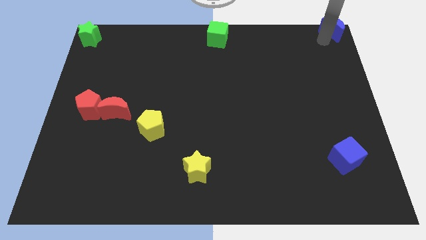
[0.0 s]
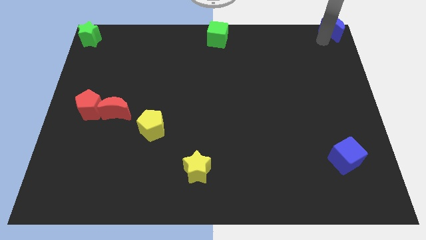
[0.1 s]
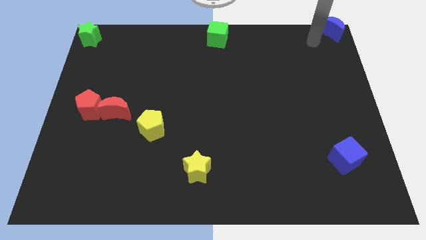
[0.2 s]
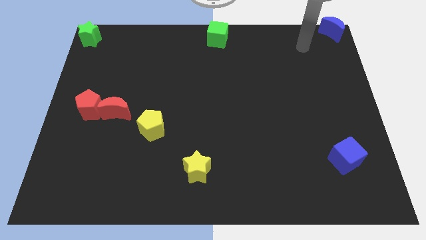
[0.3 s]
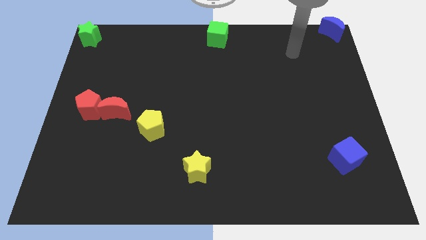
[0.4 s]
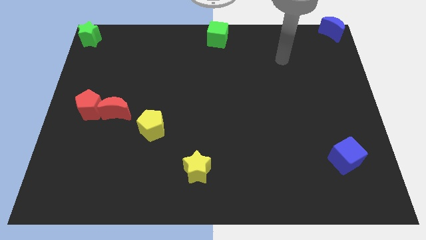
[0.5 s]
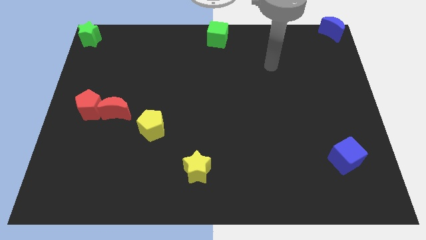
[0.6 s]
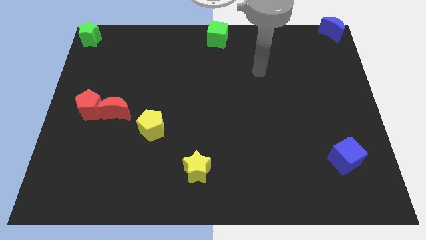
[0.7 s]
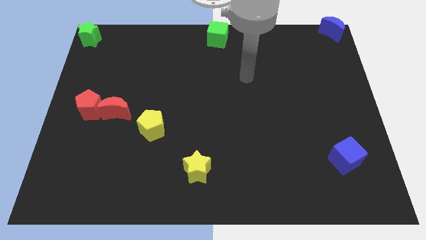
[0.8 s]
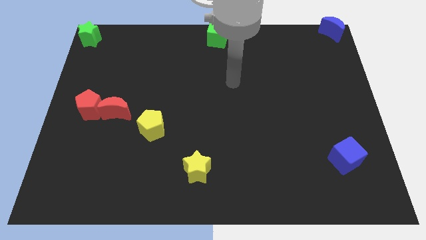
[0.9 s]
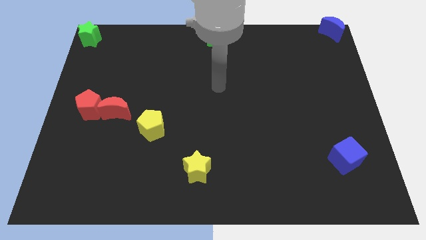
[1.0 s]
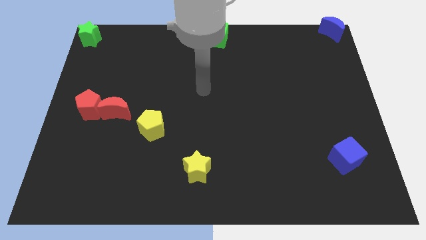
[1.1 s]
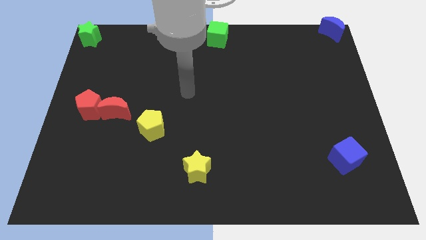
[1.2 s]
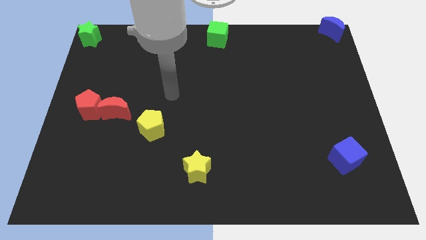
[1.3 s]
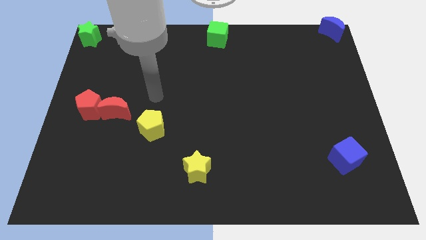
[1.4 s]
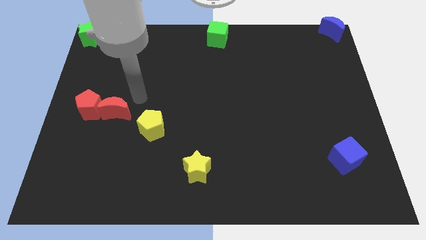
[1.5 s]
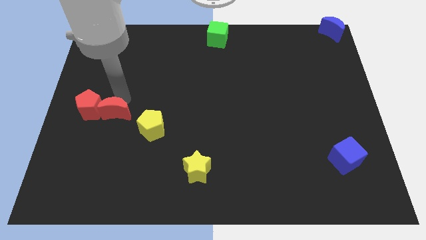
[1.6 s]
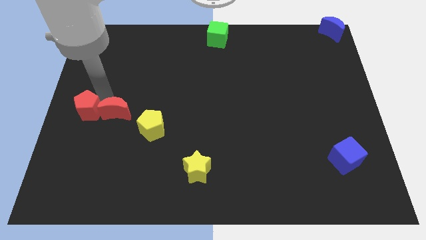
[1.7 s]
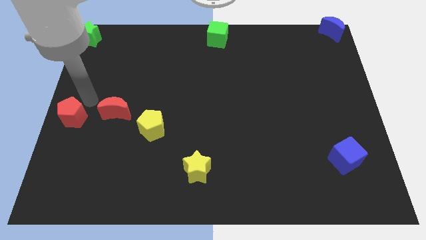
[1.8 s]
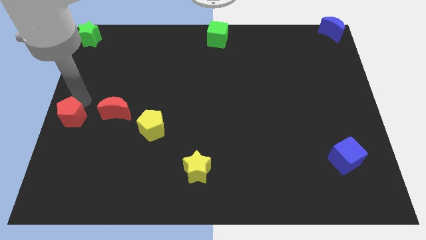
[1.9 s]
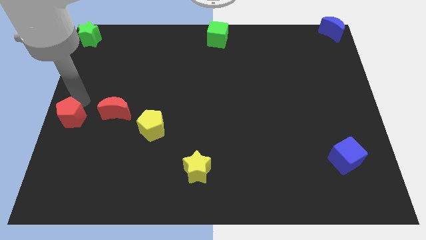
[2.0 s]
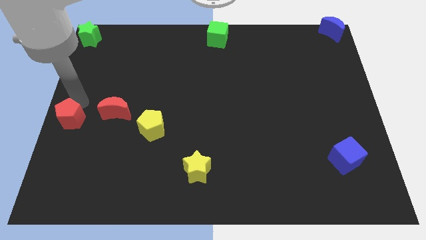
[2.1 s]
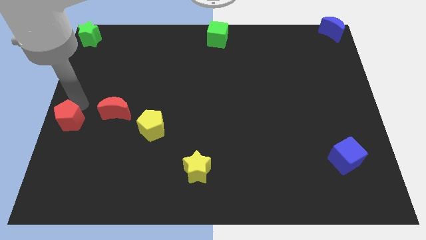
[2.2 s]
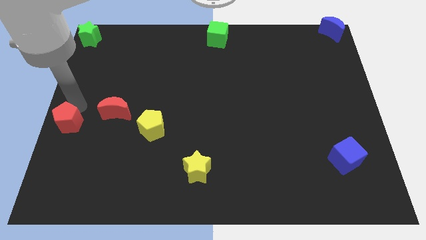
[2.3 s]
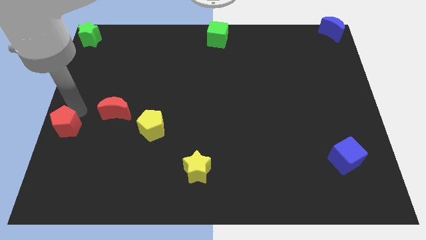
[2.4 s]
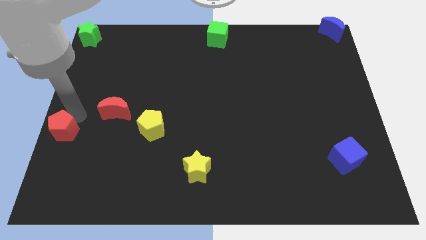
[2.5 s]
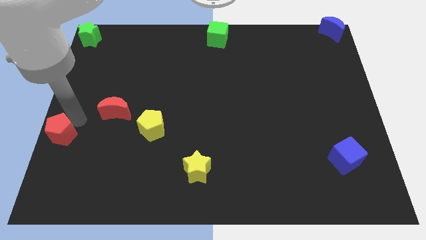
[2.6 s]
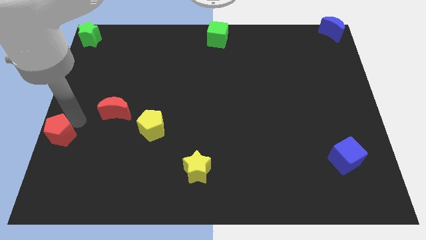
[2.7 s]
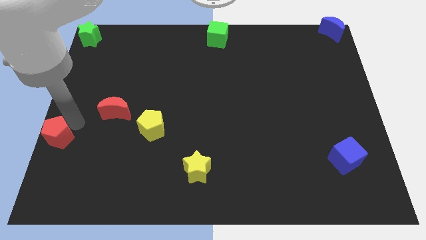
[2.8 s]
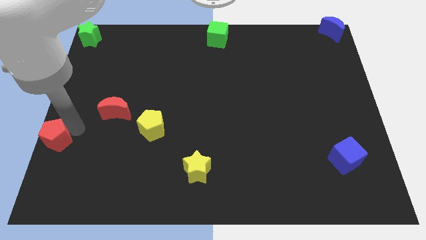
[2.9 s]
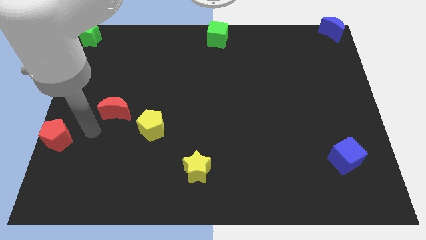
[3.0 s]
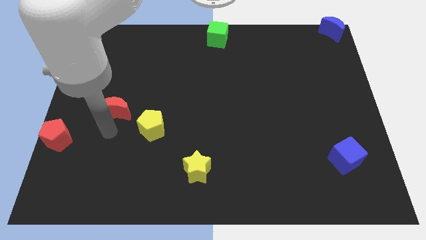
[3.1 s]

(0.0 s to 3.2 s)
push the red pentagon downward

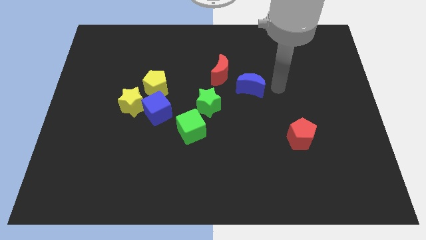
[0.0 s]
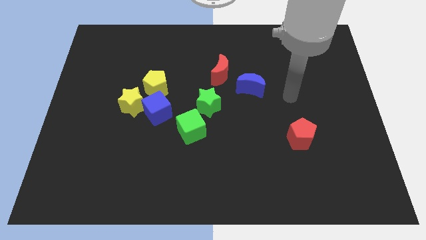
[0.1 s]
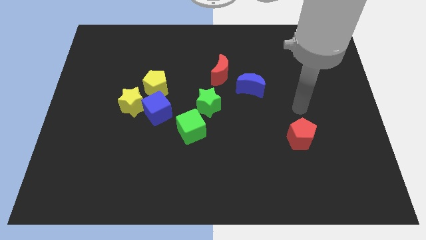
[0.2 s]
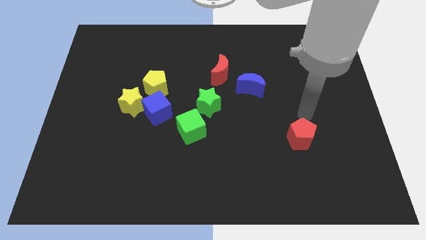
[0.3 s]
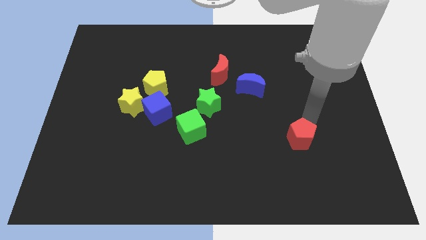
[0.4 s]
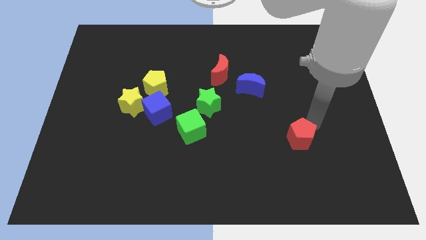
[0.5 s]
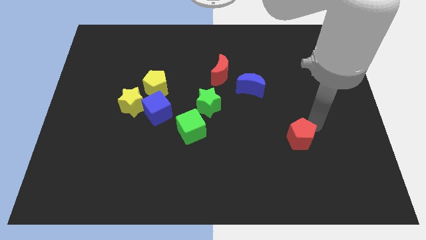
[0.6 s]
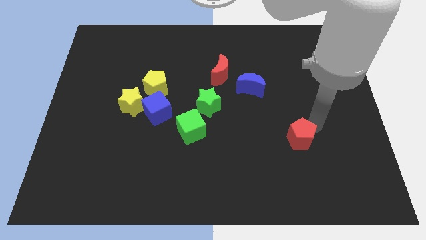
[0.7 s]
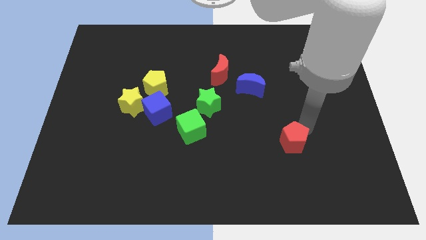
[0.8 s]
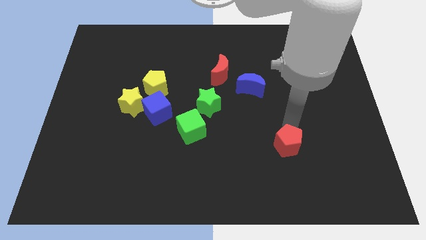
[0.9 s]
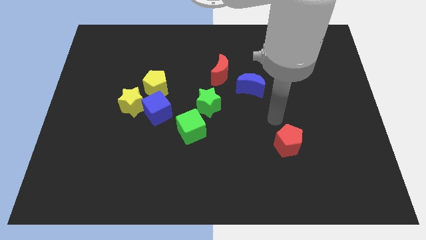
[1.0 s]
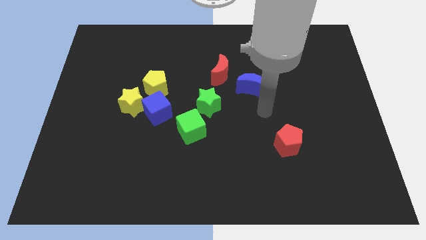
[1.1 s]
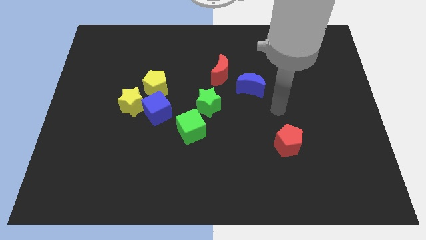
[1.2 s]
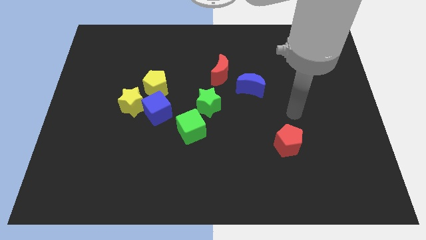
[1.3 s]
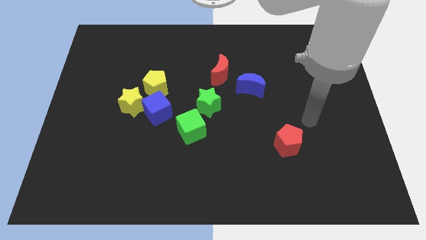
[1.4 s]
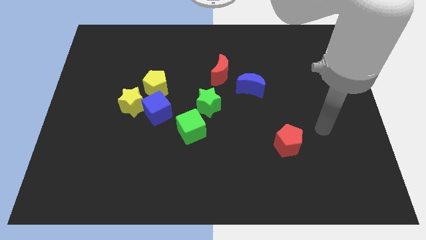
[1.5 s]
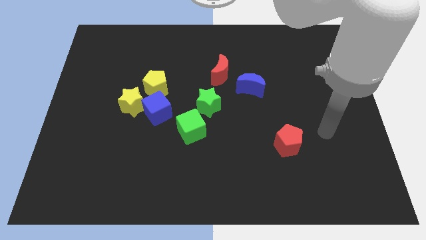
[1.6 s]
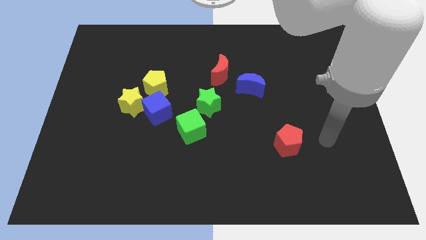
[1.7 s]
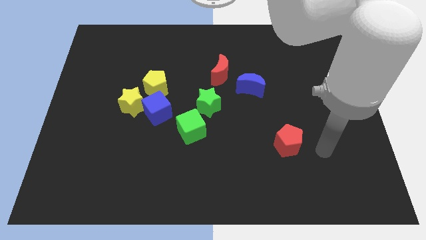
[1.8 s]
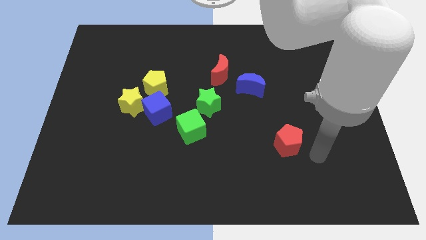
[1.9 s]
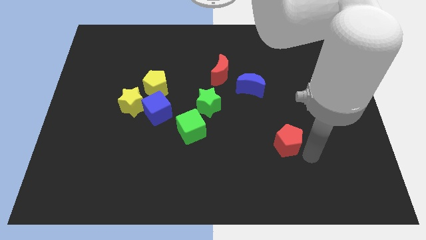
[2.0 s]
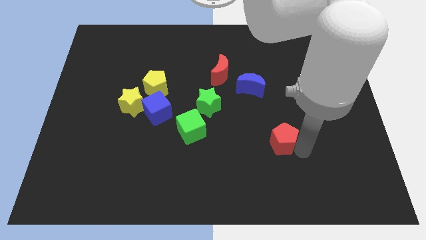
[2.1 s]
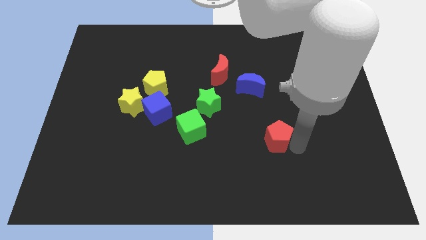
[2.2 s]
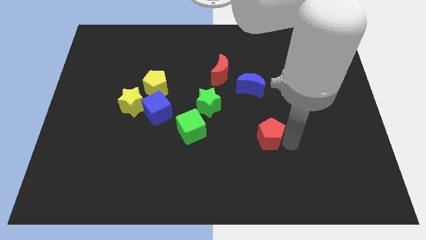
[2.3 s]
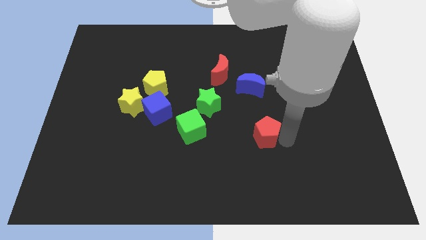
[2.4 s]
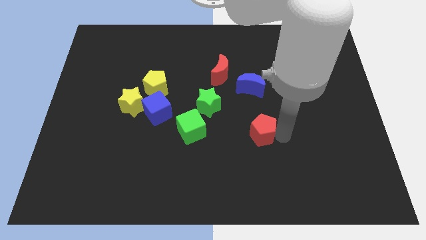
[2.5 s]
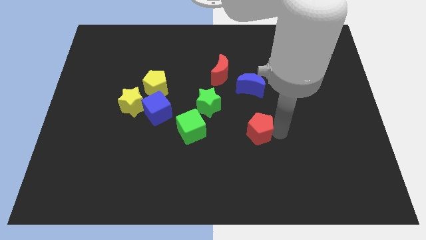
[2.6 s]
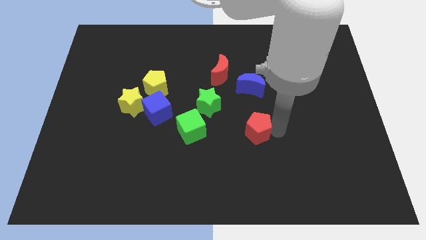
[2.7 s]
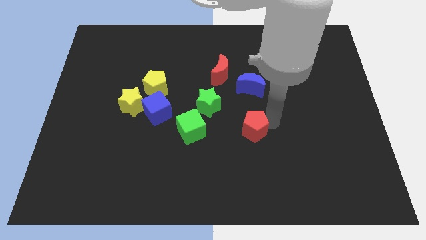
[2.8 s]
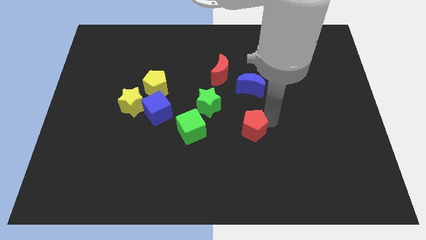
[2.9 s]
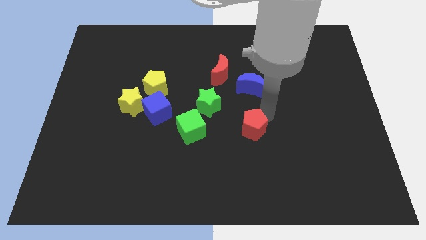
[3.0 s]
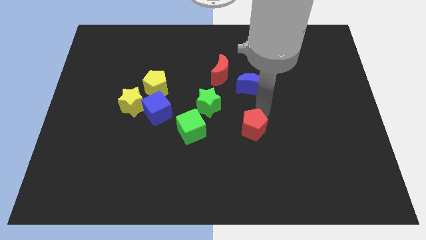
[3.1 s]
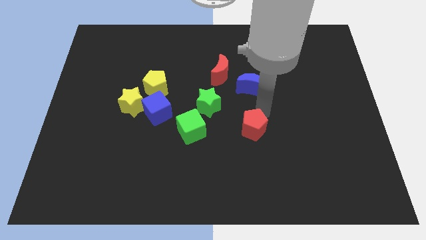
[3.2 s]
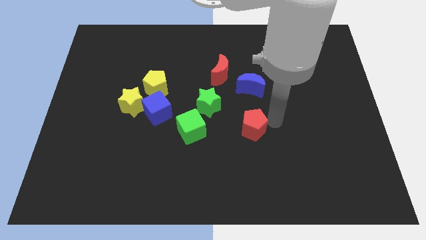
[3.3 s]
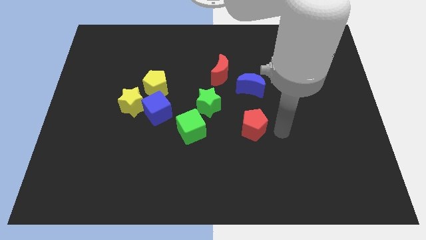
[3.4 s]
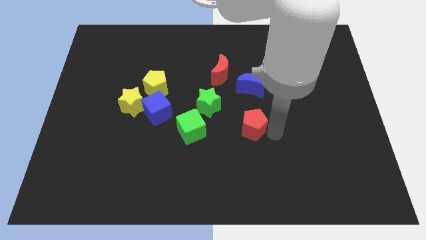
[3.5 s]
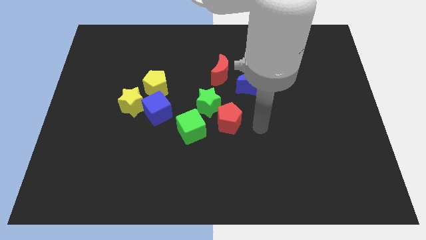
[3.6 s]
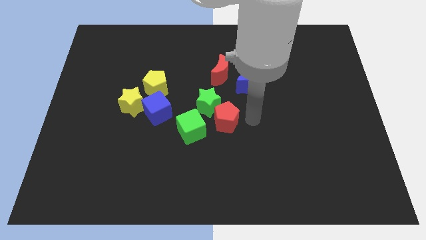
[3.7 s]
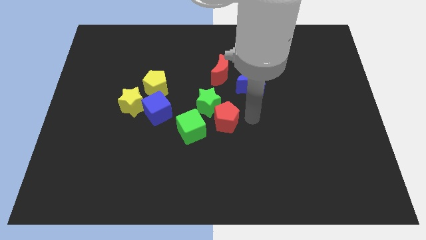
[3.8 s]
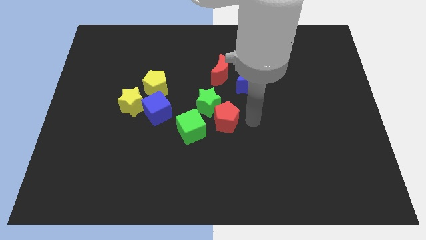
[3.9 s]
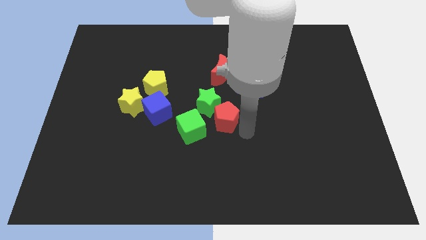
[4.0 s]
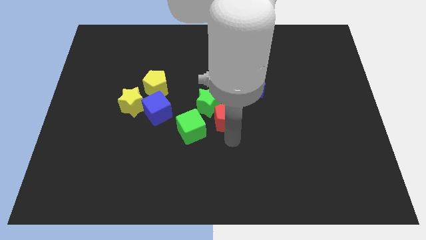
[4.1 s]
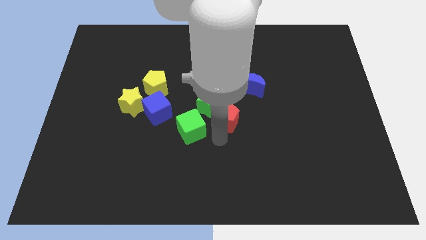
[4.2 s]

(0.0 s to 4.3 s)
push the red pentagon near to the green star

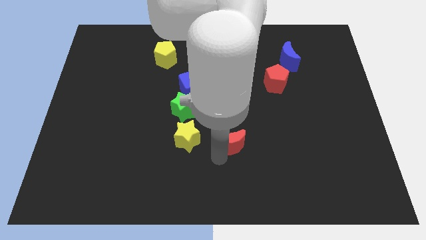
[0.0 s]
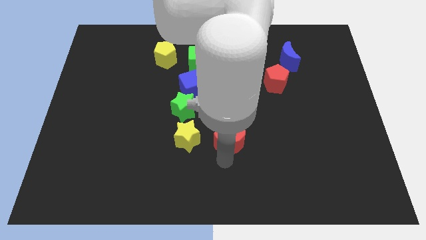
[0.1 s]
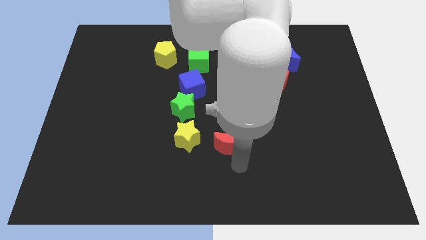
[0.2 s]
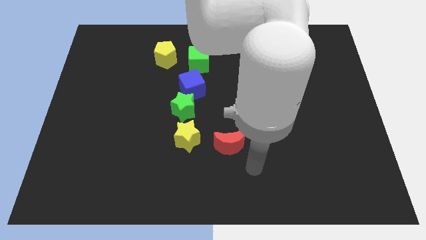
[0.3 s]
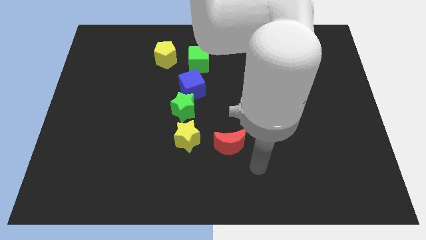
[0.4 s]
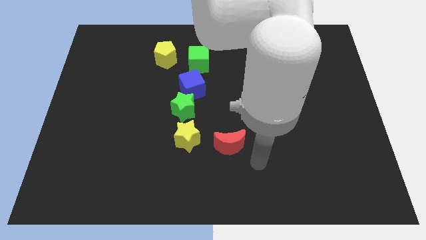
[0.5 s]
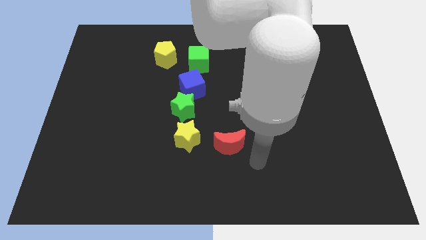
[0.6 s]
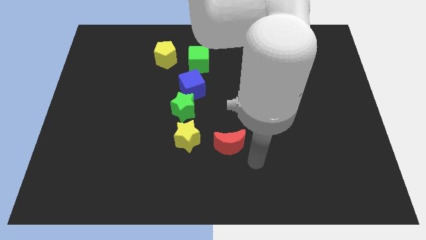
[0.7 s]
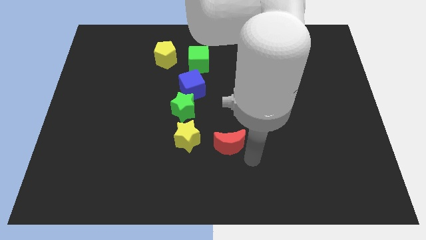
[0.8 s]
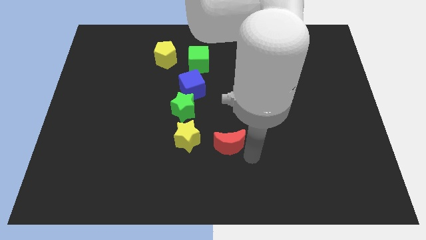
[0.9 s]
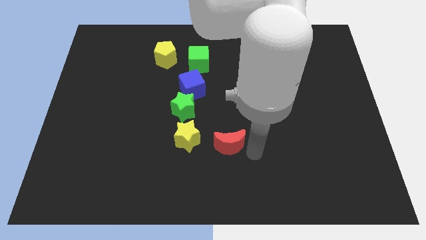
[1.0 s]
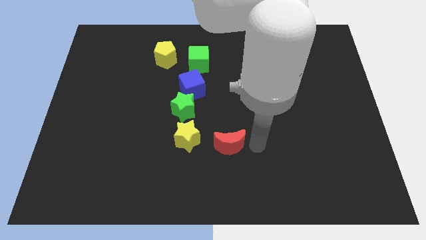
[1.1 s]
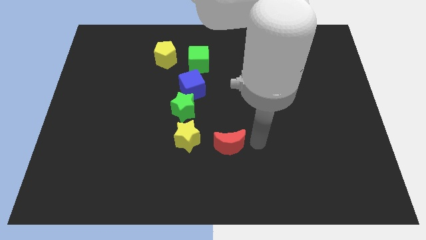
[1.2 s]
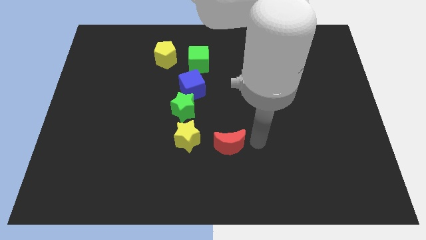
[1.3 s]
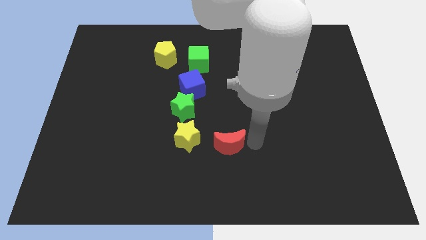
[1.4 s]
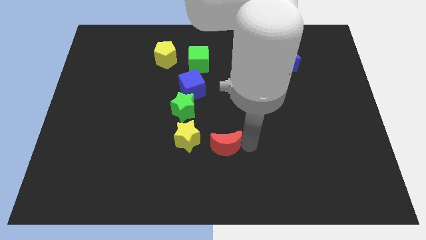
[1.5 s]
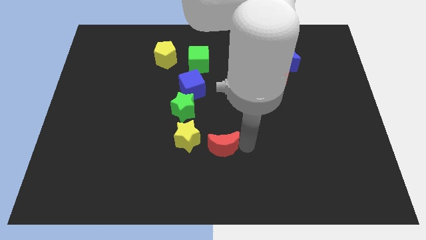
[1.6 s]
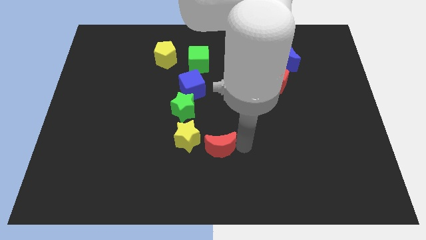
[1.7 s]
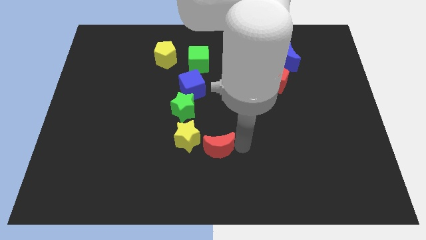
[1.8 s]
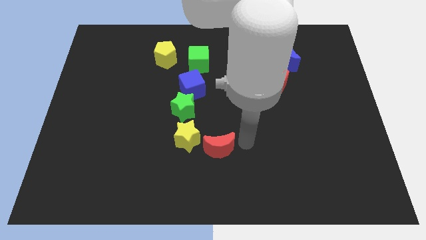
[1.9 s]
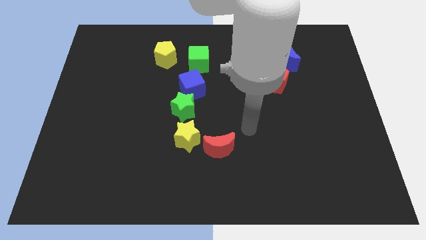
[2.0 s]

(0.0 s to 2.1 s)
push the red crescent close to the yellow star
